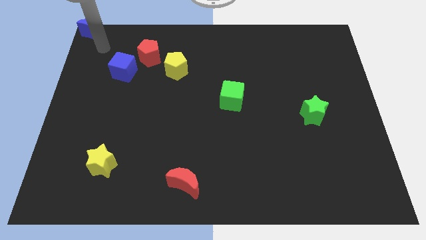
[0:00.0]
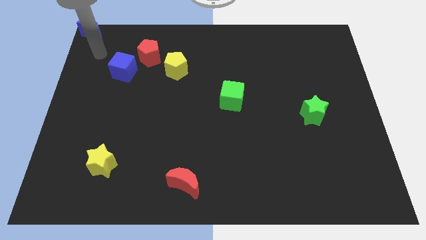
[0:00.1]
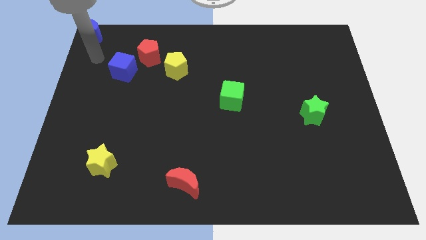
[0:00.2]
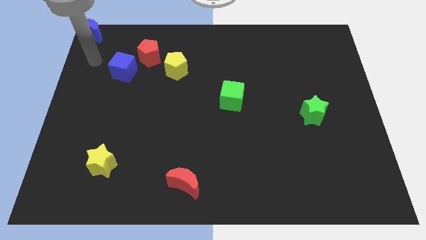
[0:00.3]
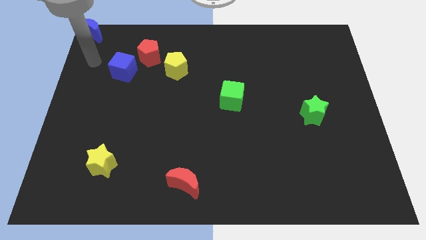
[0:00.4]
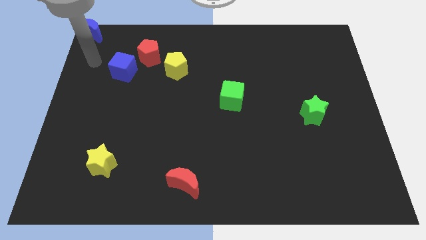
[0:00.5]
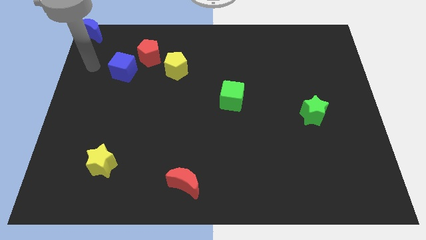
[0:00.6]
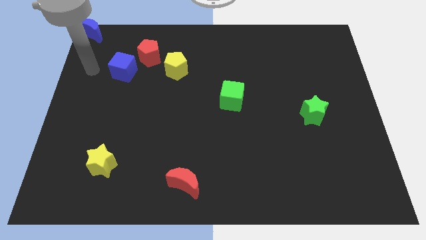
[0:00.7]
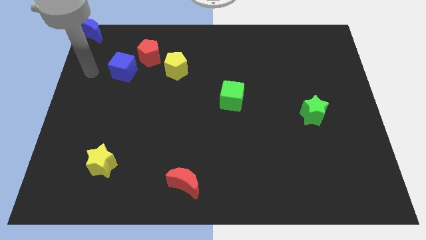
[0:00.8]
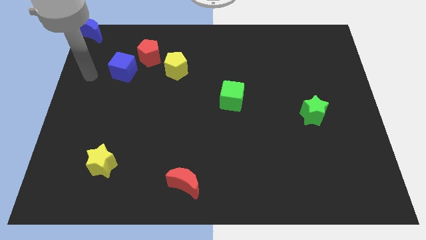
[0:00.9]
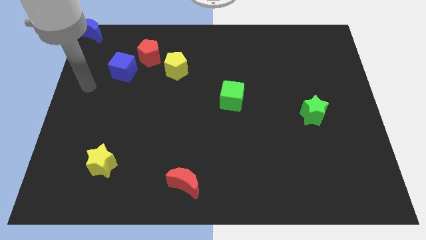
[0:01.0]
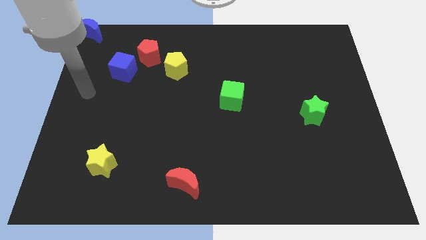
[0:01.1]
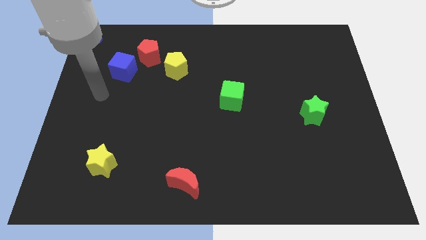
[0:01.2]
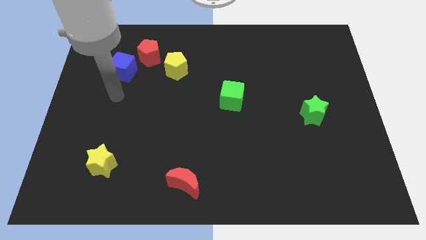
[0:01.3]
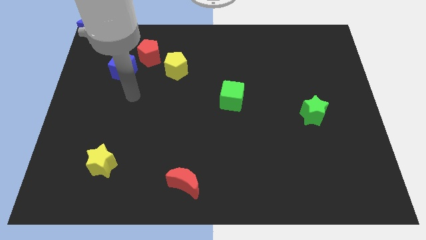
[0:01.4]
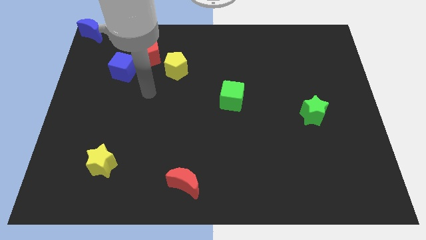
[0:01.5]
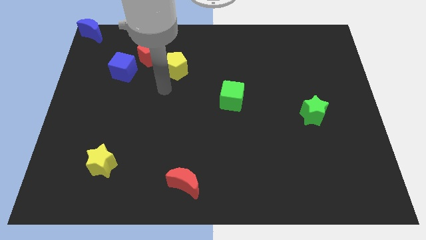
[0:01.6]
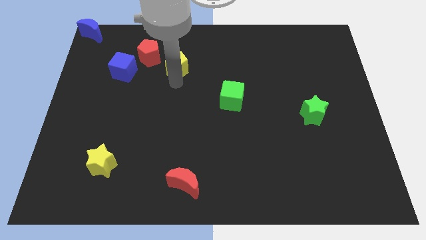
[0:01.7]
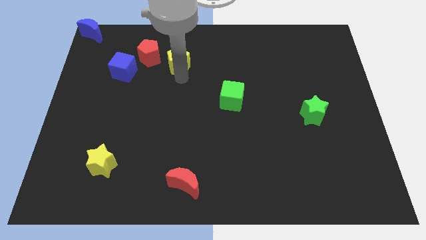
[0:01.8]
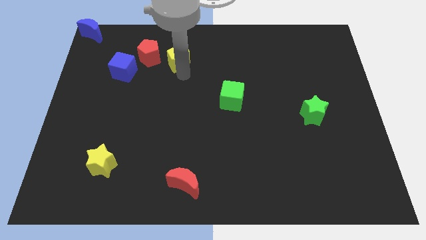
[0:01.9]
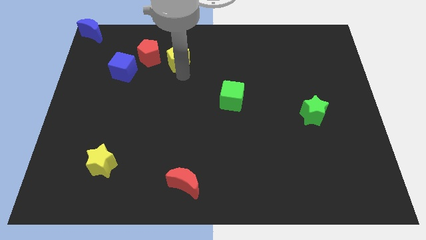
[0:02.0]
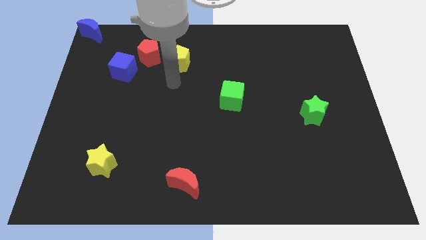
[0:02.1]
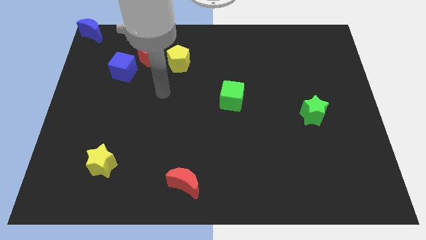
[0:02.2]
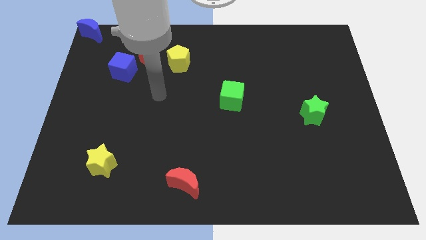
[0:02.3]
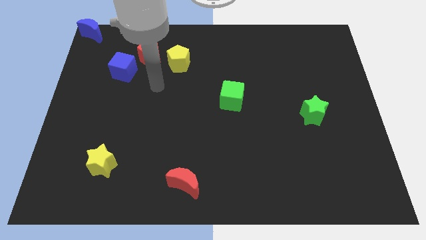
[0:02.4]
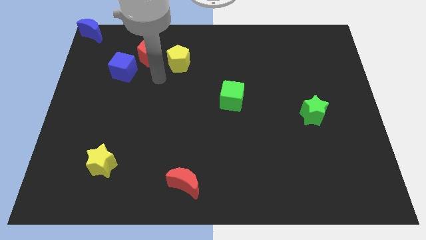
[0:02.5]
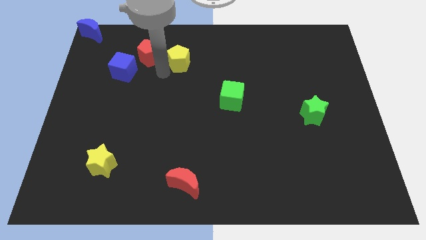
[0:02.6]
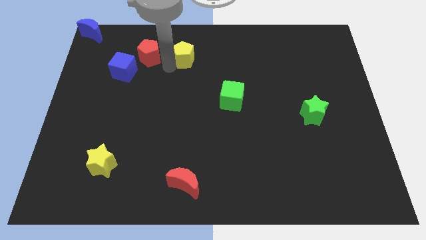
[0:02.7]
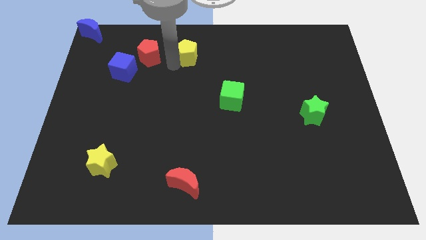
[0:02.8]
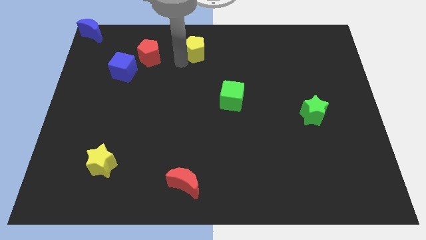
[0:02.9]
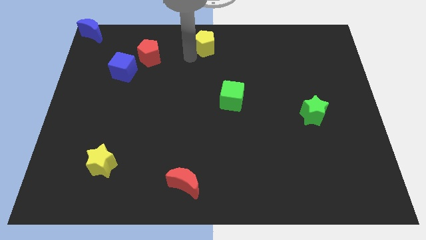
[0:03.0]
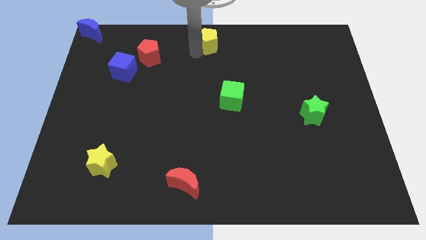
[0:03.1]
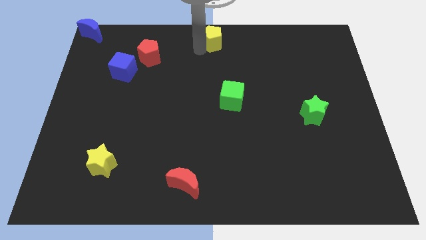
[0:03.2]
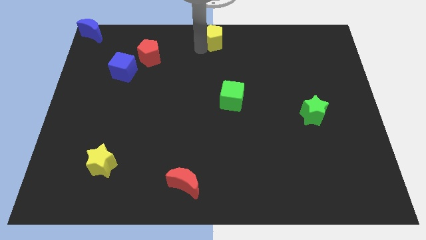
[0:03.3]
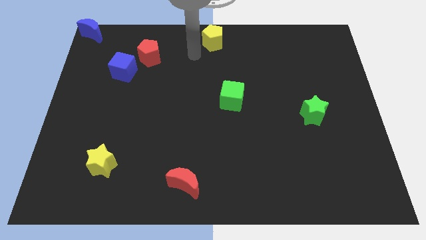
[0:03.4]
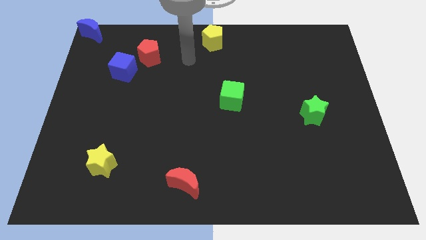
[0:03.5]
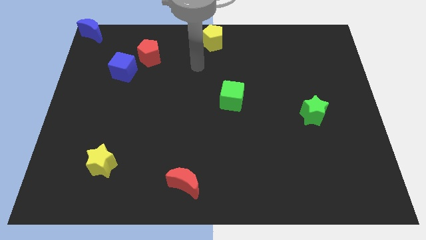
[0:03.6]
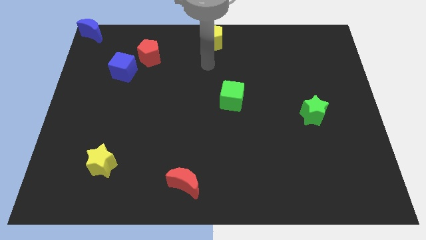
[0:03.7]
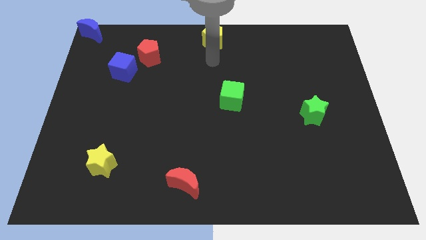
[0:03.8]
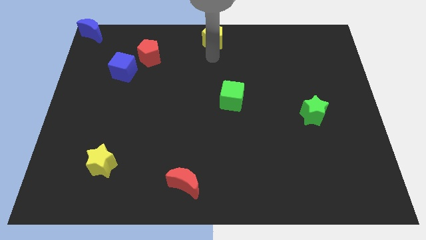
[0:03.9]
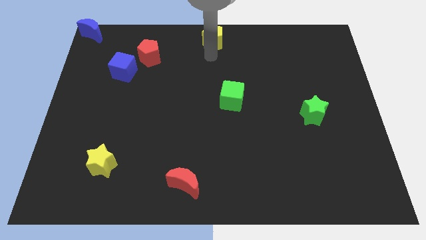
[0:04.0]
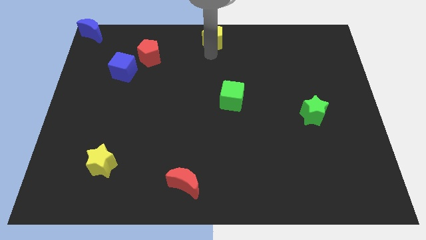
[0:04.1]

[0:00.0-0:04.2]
place the yellow pentagon above the green cube

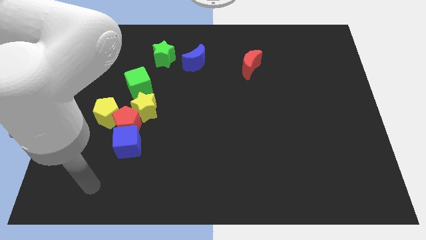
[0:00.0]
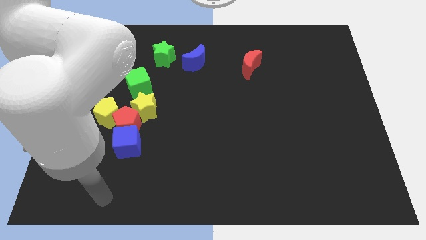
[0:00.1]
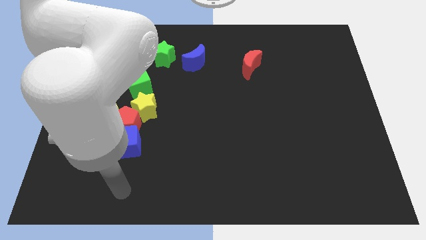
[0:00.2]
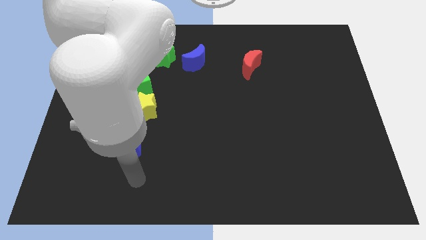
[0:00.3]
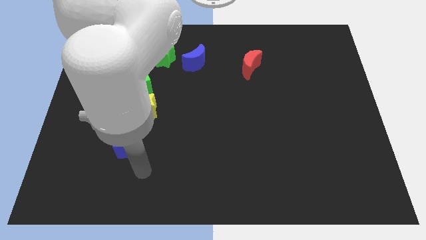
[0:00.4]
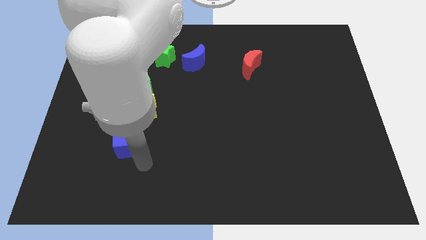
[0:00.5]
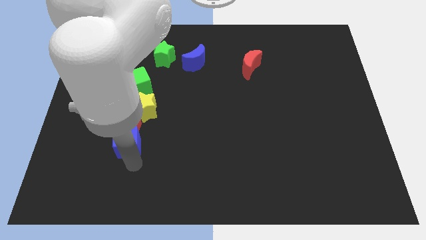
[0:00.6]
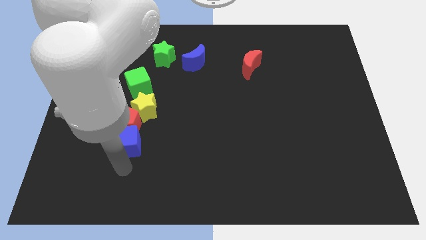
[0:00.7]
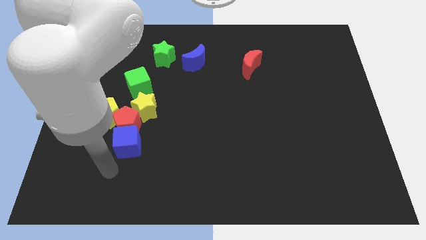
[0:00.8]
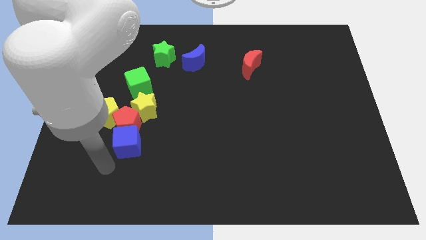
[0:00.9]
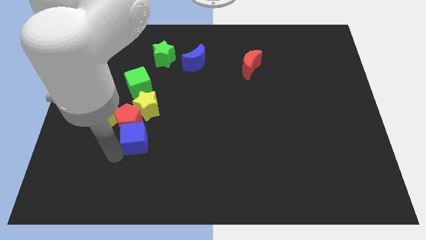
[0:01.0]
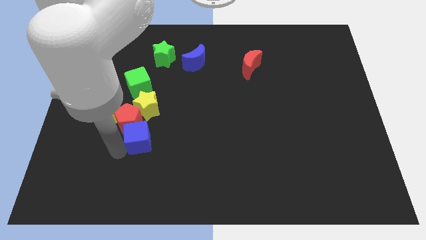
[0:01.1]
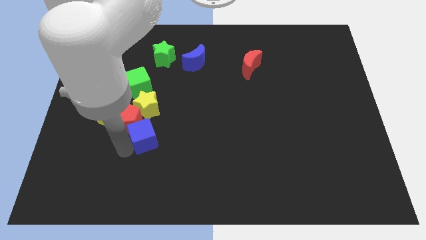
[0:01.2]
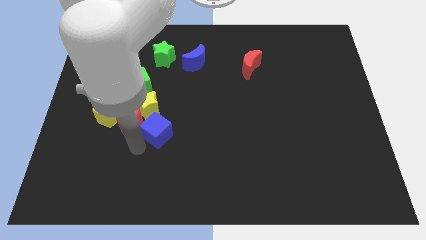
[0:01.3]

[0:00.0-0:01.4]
place the blue cube below the yellow star

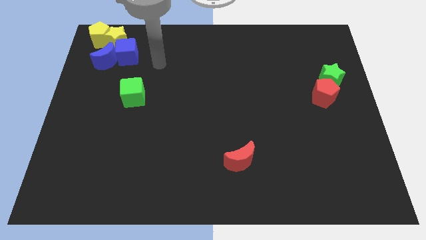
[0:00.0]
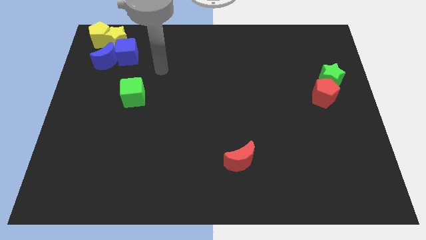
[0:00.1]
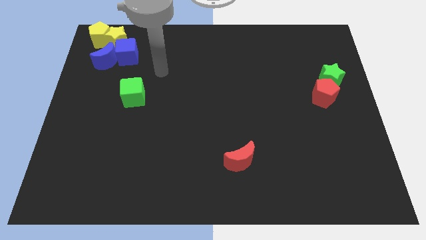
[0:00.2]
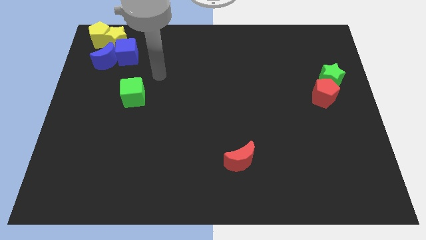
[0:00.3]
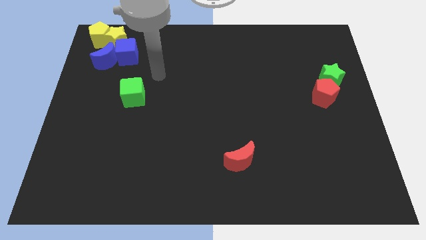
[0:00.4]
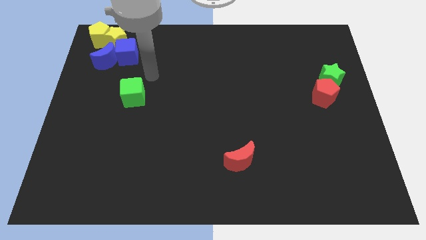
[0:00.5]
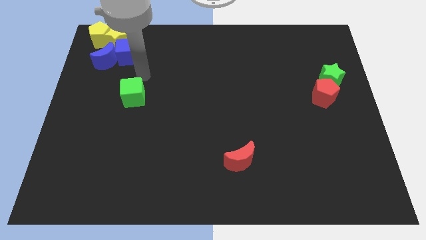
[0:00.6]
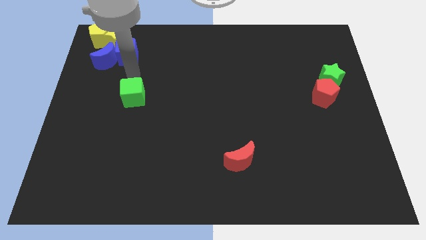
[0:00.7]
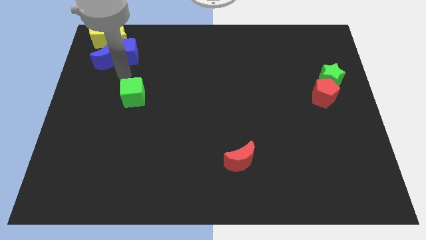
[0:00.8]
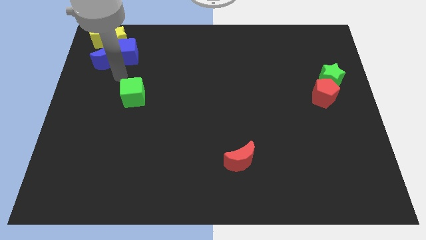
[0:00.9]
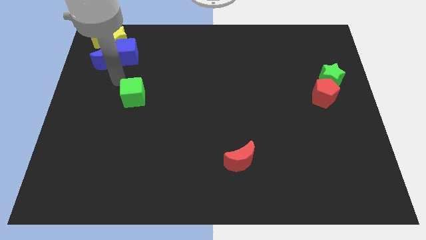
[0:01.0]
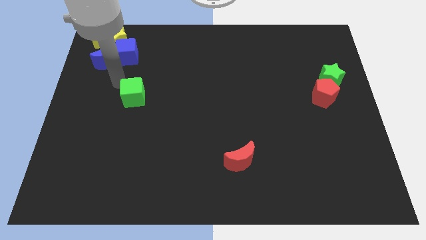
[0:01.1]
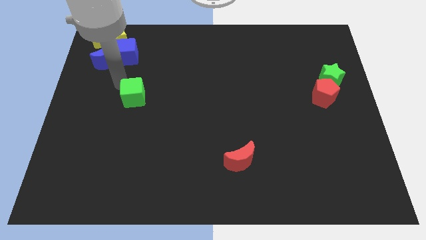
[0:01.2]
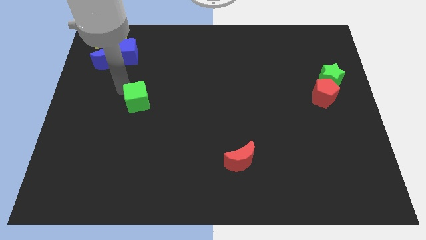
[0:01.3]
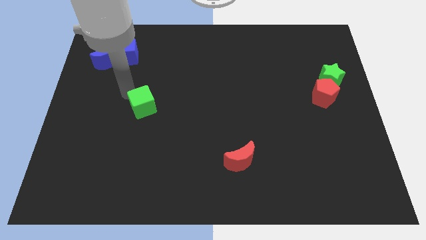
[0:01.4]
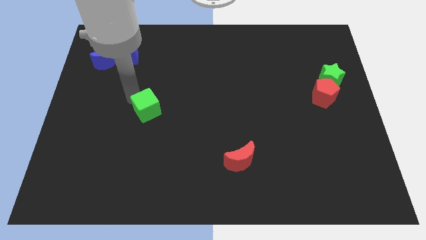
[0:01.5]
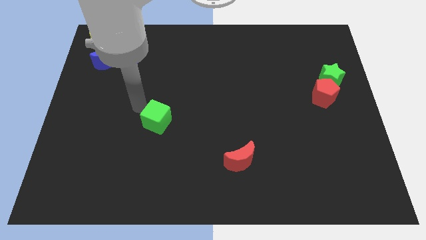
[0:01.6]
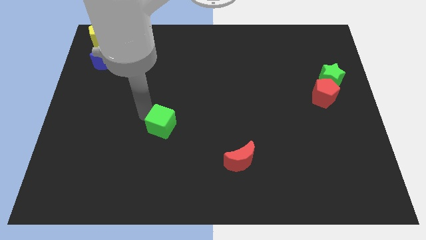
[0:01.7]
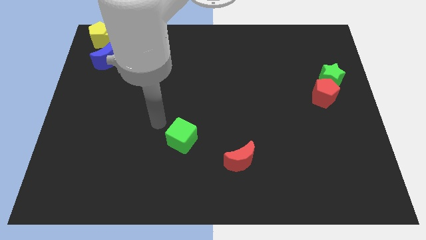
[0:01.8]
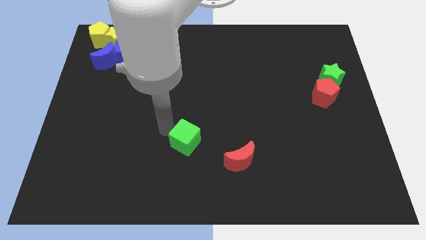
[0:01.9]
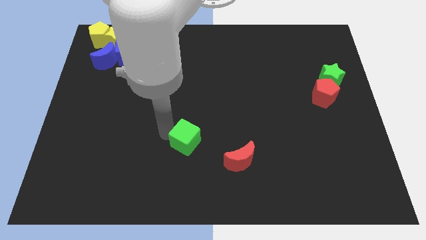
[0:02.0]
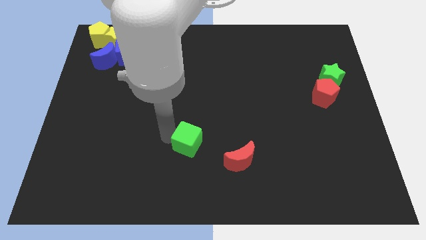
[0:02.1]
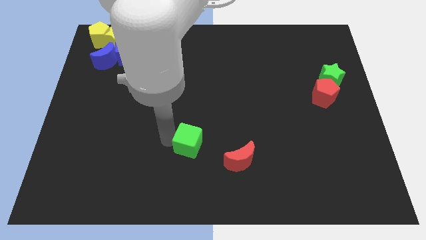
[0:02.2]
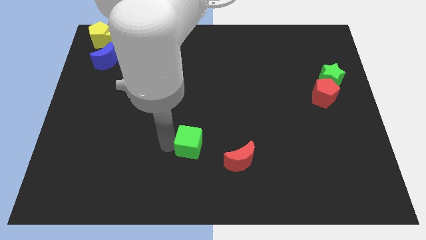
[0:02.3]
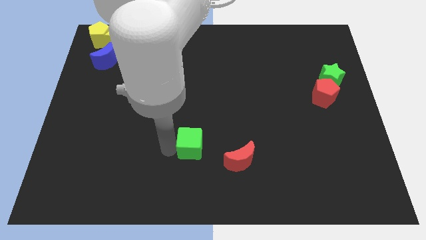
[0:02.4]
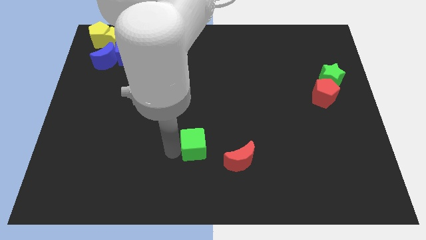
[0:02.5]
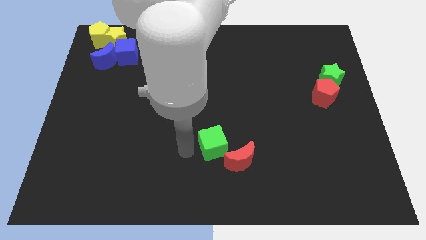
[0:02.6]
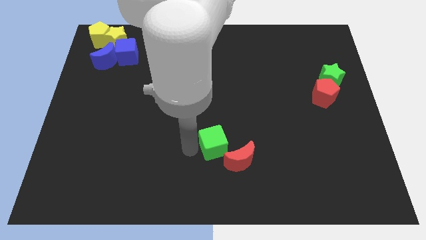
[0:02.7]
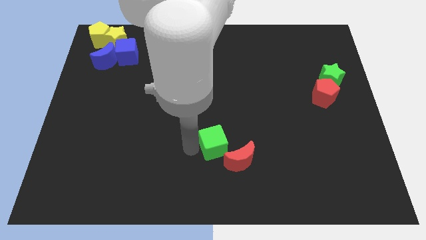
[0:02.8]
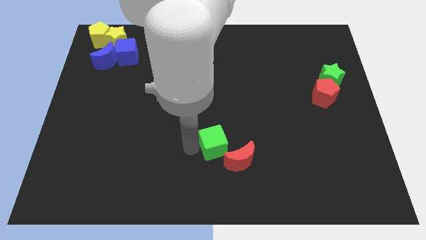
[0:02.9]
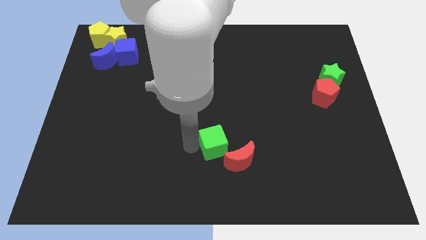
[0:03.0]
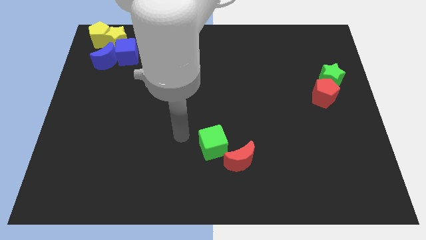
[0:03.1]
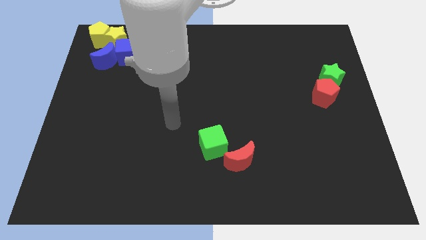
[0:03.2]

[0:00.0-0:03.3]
place green cube above red crescent
